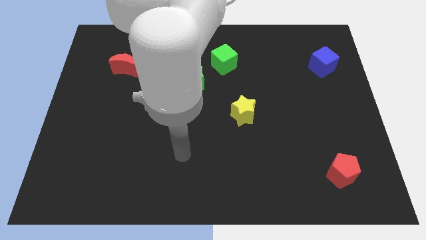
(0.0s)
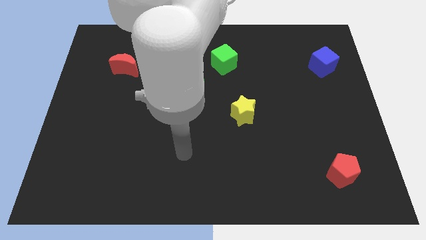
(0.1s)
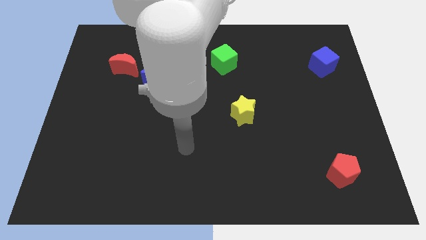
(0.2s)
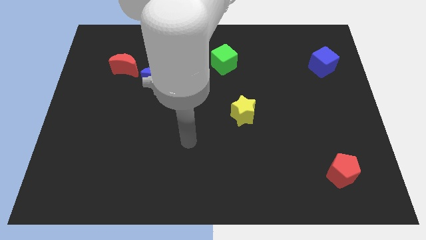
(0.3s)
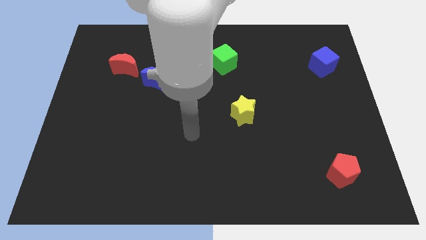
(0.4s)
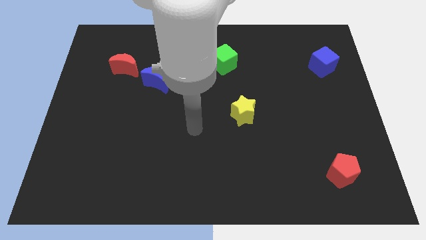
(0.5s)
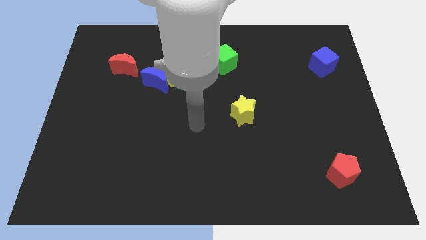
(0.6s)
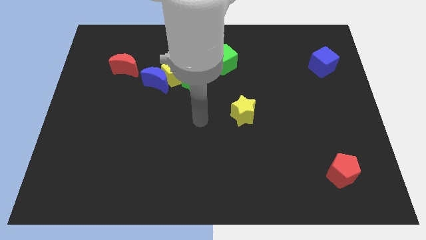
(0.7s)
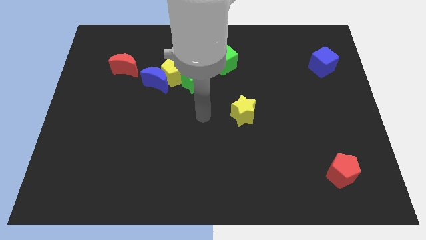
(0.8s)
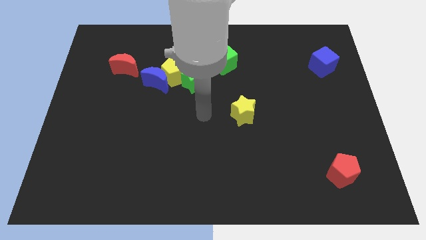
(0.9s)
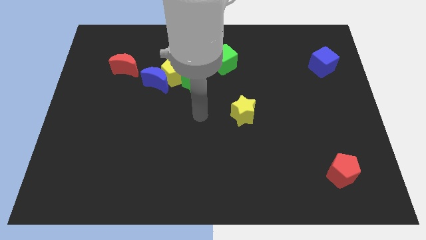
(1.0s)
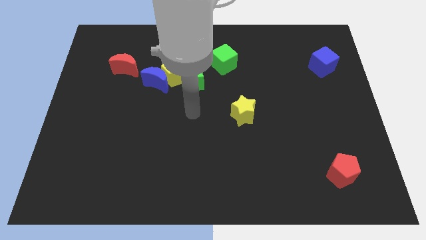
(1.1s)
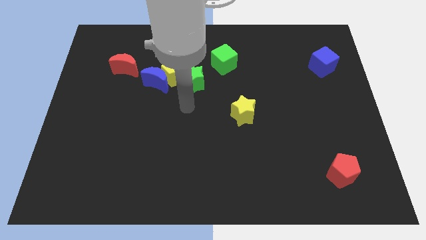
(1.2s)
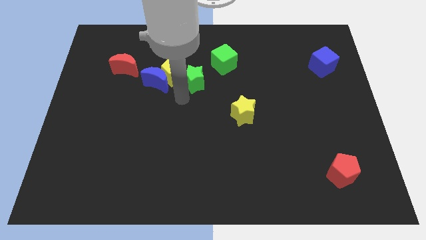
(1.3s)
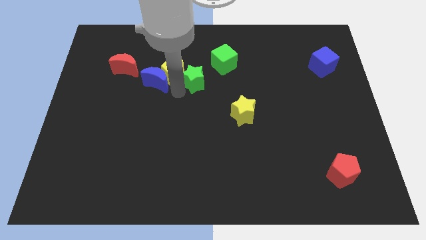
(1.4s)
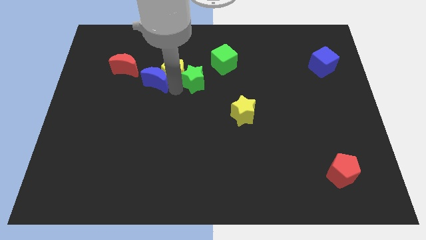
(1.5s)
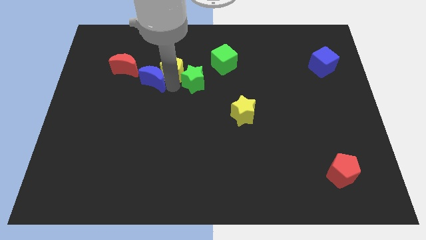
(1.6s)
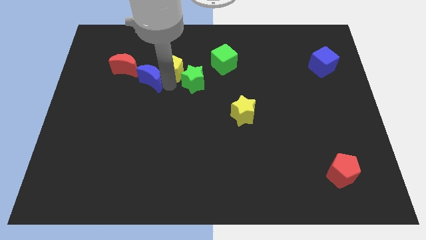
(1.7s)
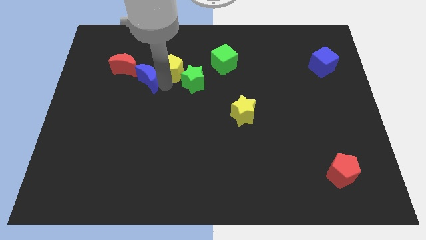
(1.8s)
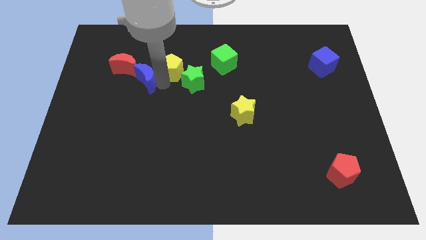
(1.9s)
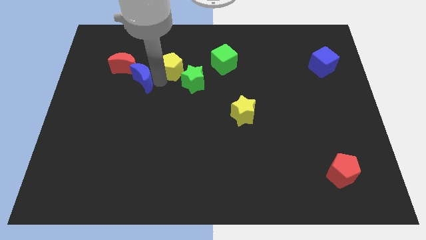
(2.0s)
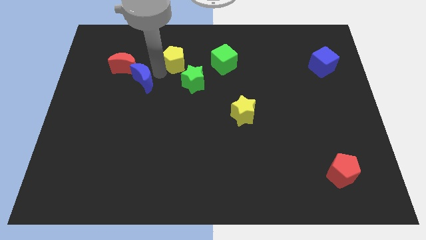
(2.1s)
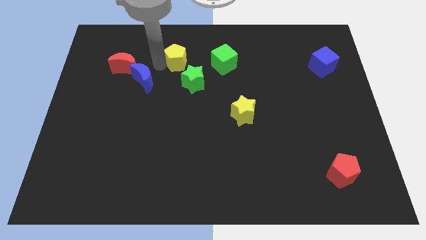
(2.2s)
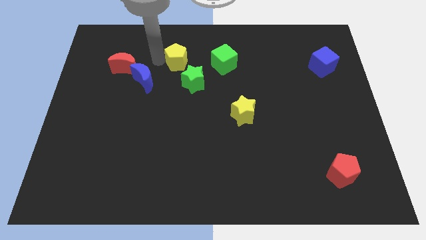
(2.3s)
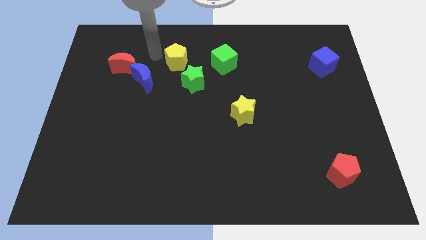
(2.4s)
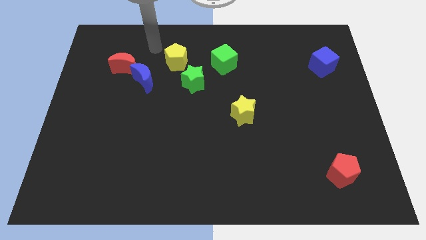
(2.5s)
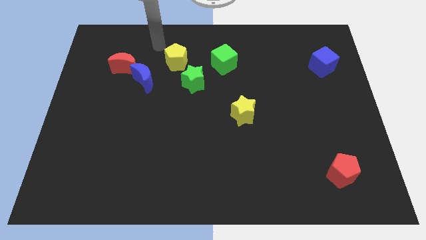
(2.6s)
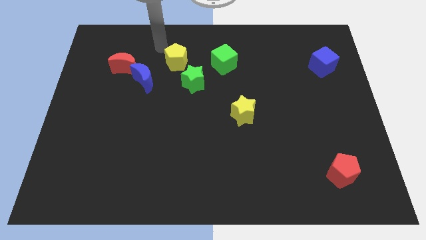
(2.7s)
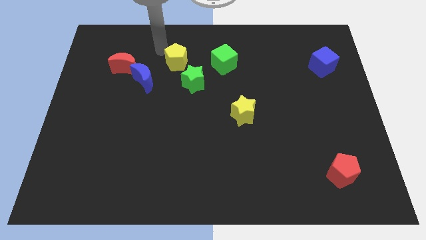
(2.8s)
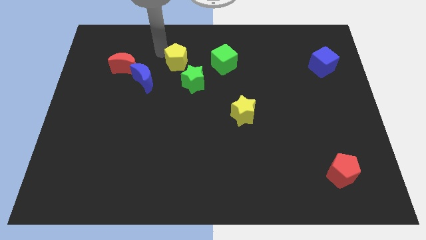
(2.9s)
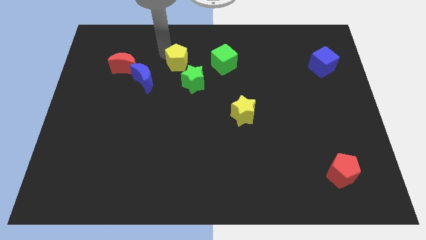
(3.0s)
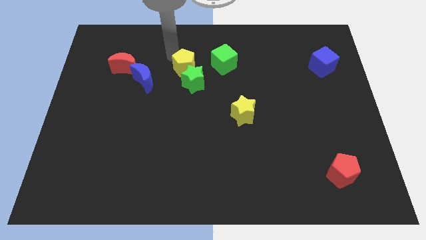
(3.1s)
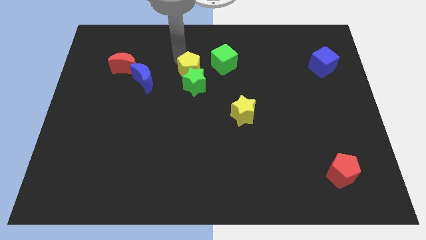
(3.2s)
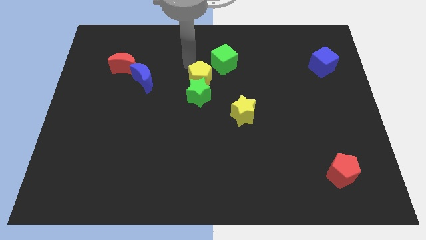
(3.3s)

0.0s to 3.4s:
move the yellow pentagon to the top side of the green star

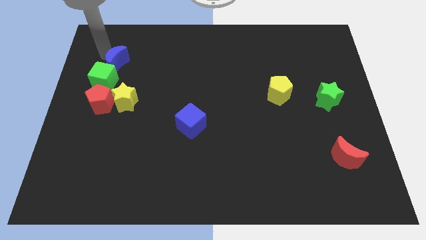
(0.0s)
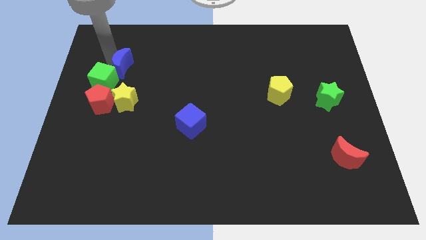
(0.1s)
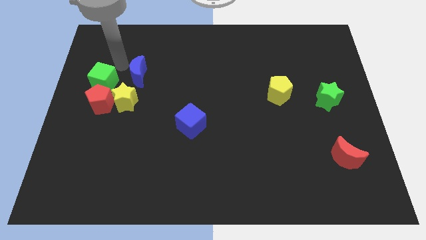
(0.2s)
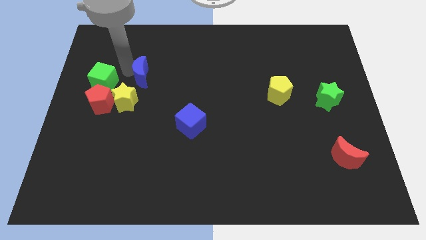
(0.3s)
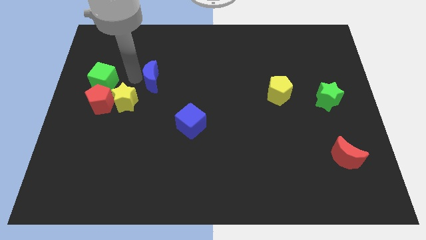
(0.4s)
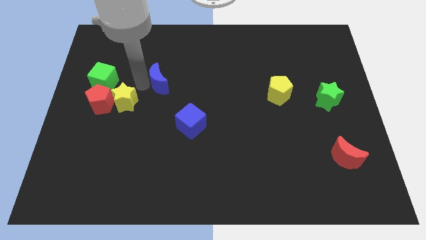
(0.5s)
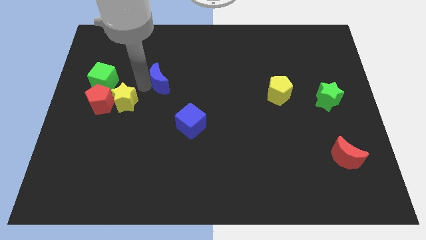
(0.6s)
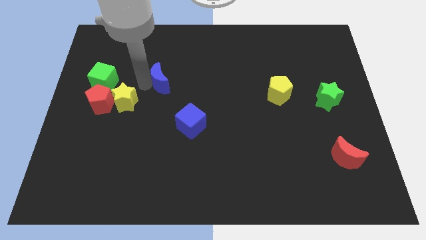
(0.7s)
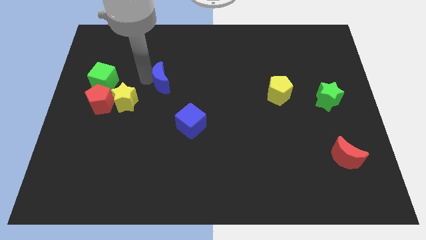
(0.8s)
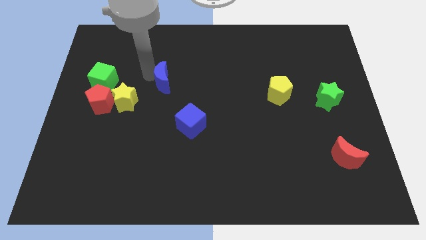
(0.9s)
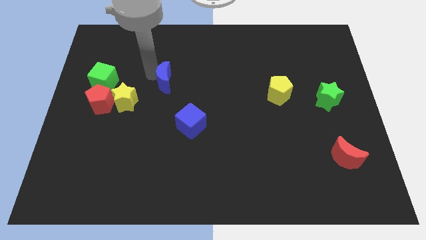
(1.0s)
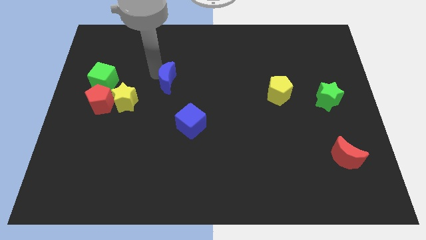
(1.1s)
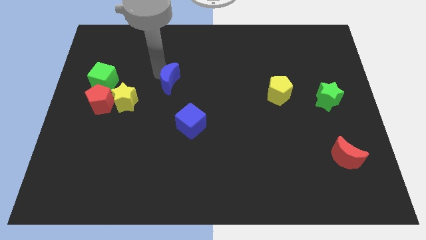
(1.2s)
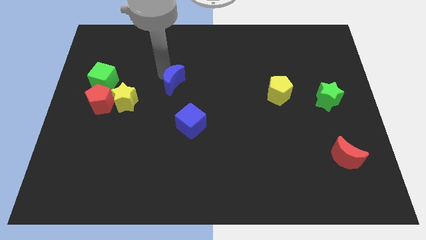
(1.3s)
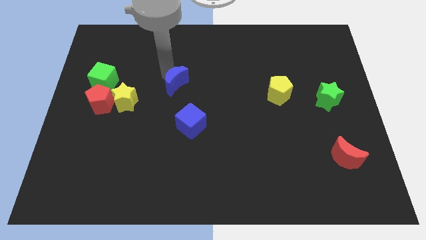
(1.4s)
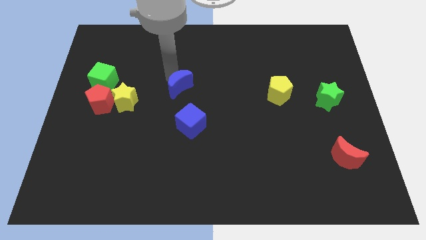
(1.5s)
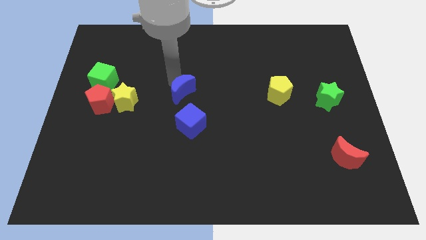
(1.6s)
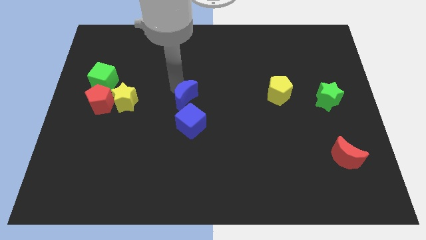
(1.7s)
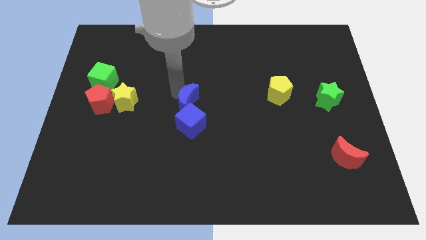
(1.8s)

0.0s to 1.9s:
place the blue crescent in between yellow star and pentagon

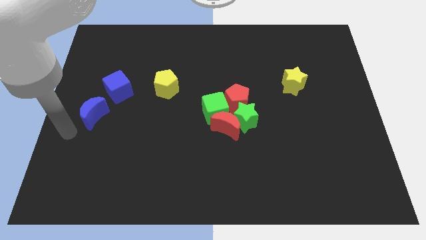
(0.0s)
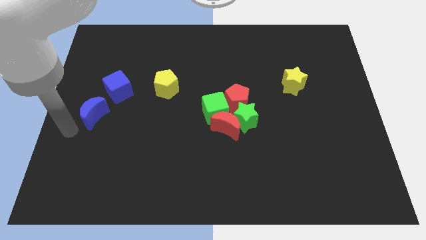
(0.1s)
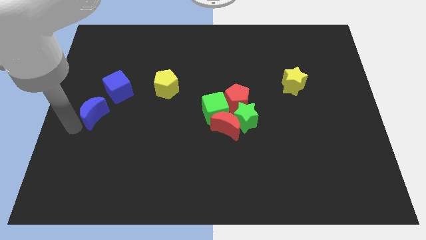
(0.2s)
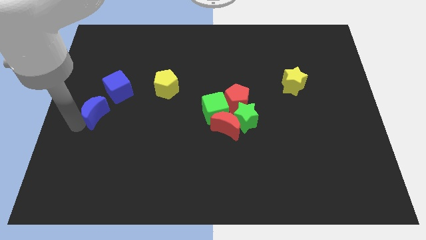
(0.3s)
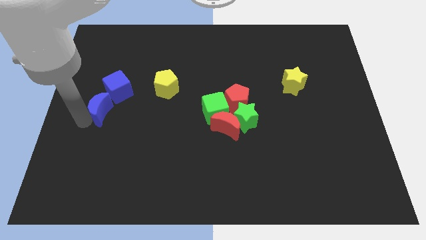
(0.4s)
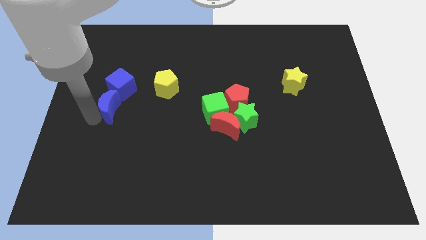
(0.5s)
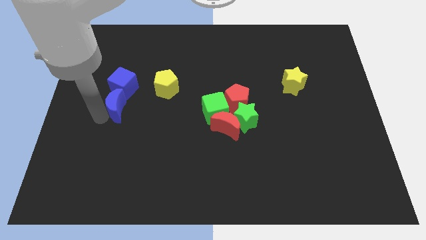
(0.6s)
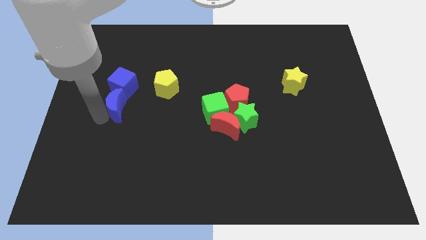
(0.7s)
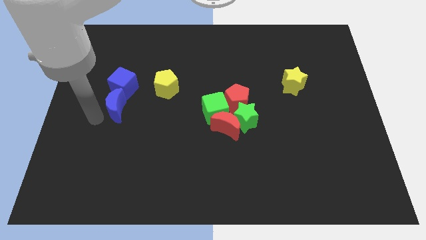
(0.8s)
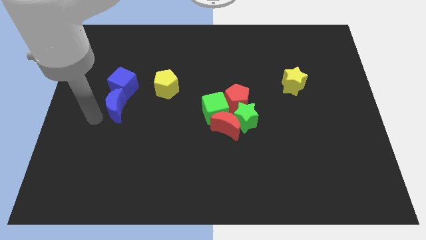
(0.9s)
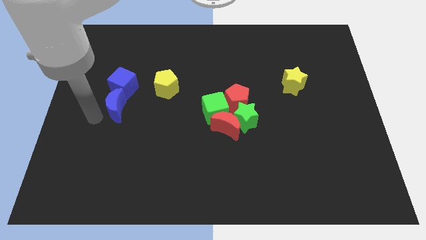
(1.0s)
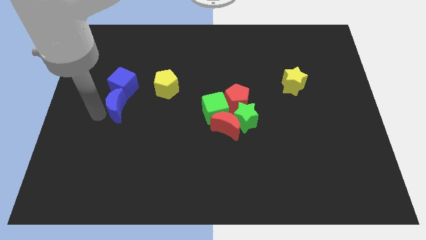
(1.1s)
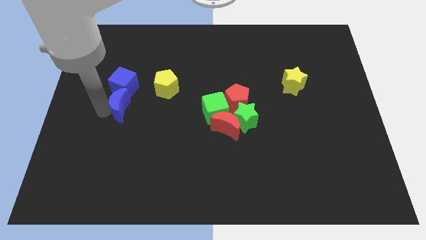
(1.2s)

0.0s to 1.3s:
attach the blue moon to the blue cube

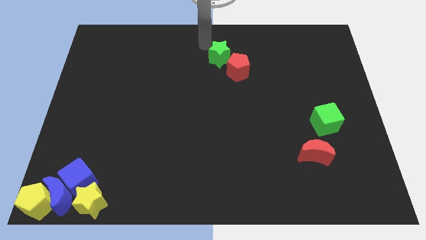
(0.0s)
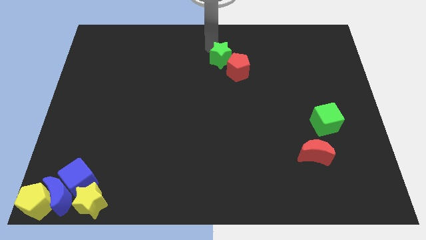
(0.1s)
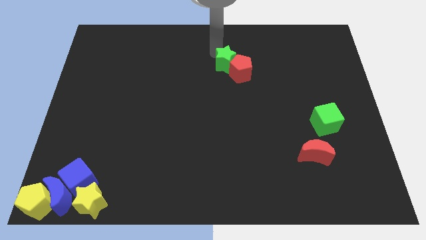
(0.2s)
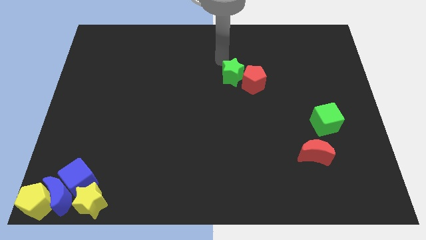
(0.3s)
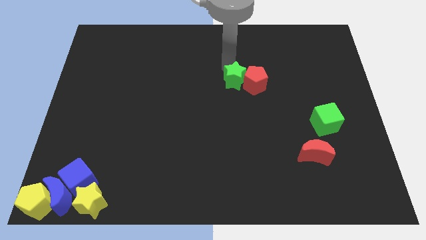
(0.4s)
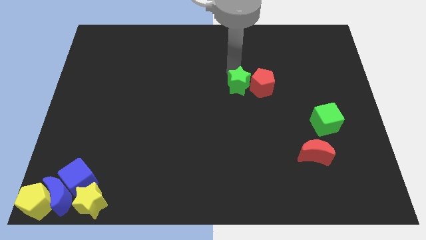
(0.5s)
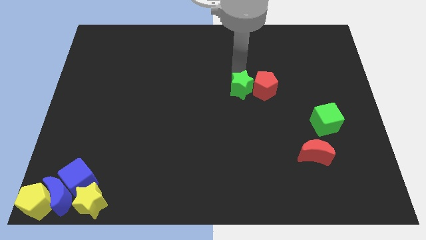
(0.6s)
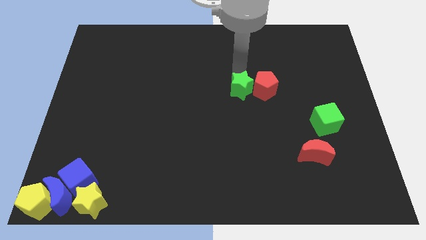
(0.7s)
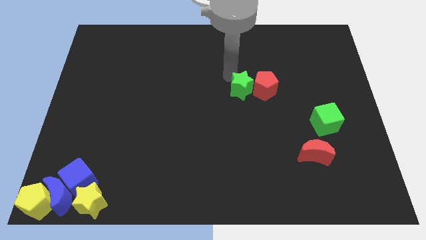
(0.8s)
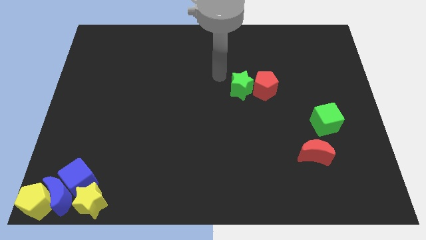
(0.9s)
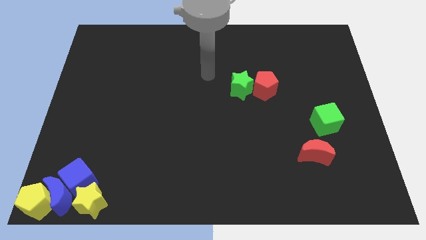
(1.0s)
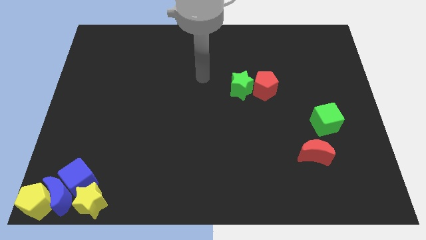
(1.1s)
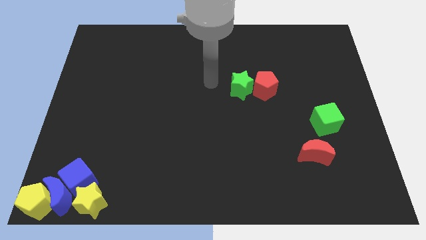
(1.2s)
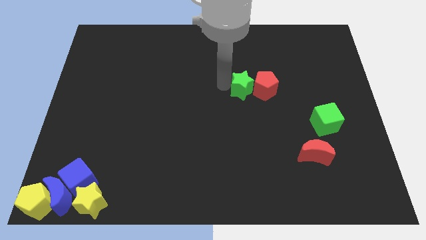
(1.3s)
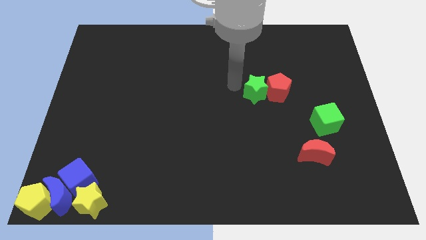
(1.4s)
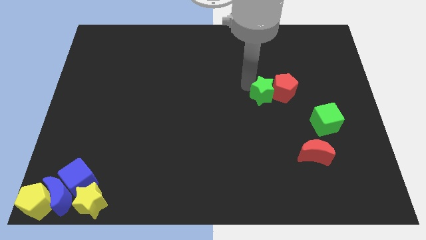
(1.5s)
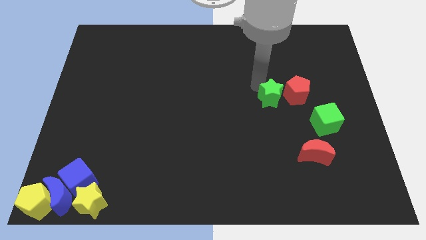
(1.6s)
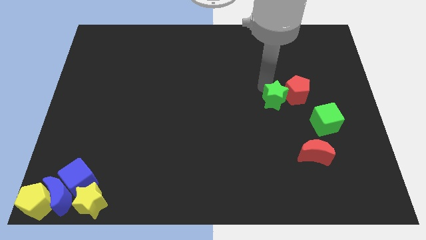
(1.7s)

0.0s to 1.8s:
move the green star and the red pentagon towards the center right

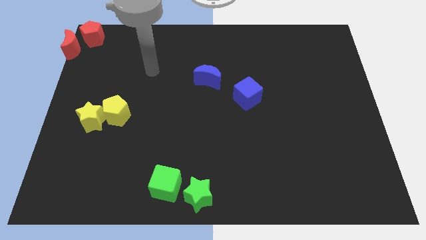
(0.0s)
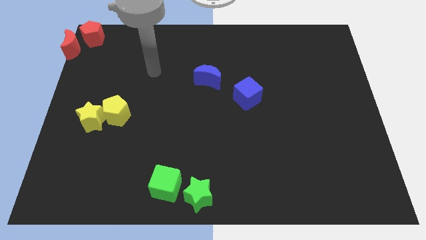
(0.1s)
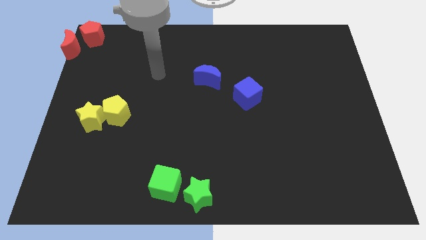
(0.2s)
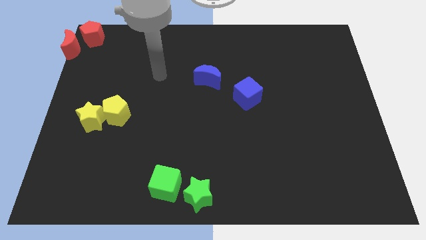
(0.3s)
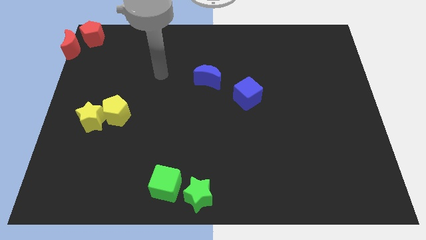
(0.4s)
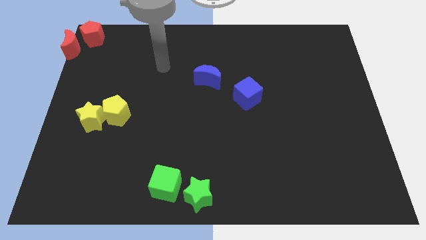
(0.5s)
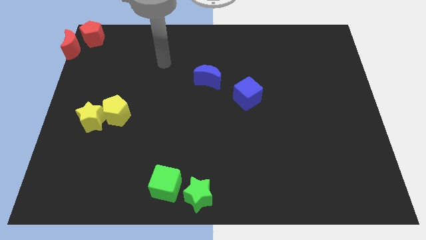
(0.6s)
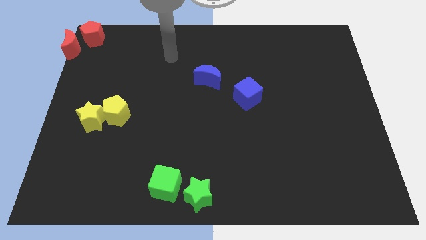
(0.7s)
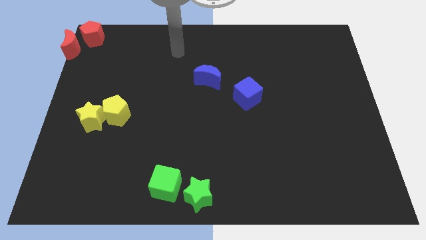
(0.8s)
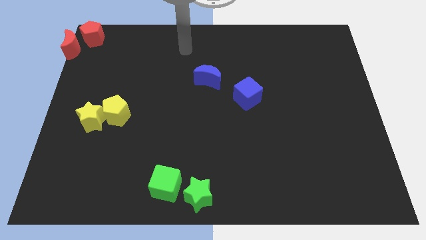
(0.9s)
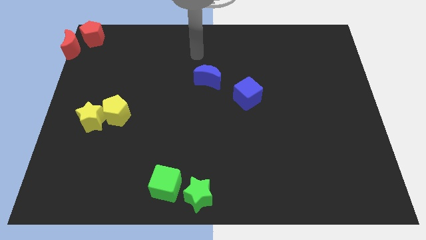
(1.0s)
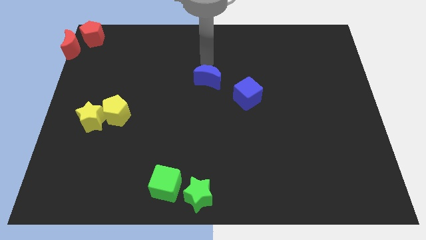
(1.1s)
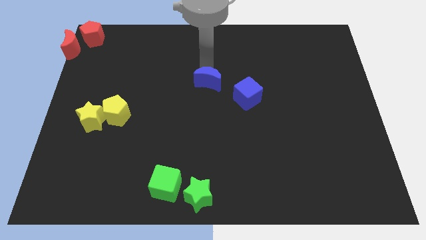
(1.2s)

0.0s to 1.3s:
place your arm to the top of the blue moon
